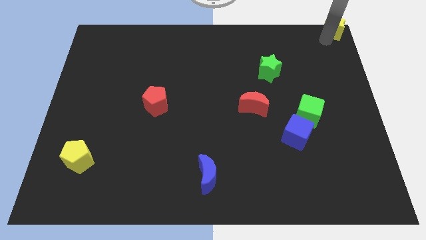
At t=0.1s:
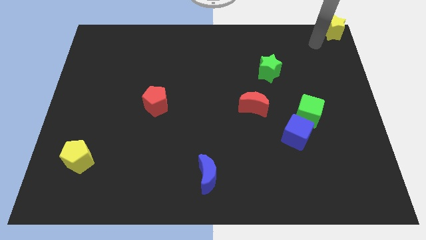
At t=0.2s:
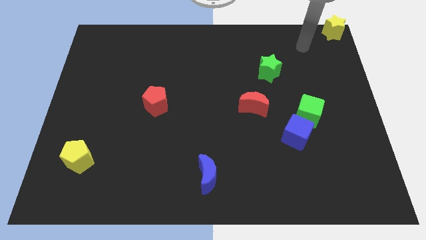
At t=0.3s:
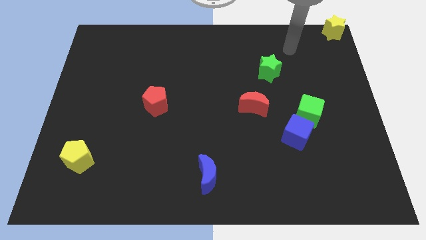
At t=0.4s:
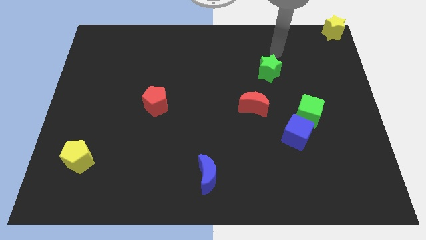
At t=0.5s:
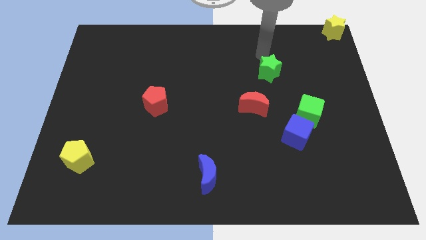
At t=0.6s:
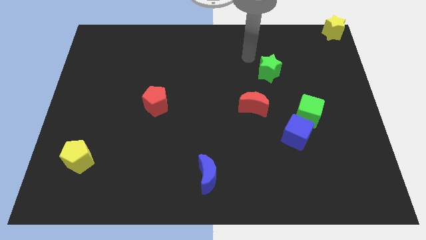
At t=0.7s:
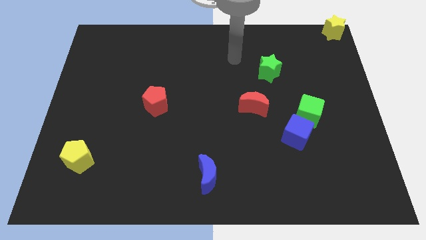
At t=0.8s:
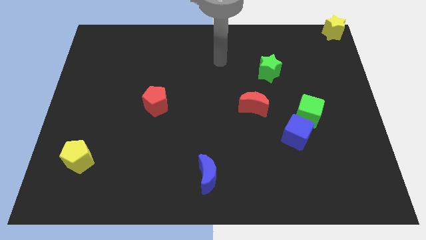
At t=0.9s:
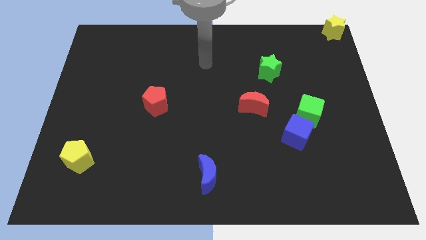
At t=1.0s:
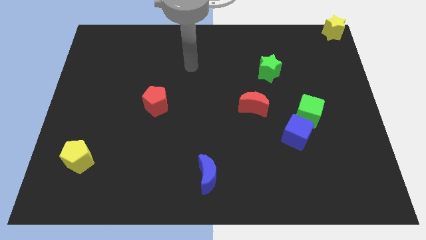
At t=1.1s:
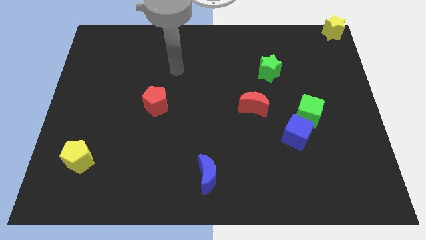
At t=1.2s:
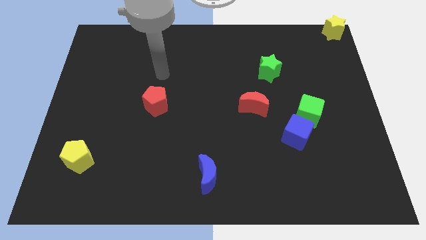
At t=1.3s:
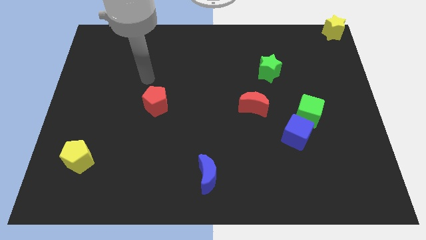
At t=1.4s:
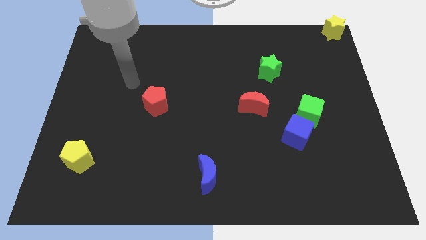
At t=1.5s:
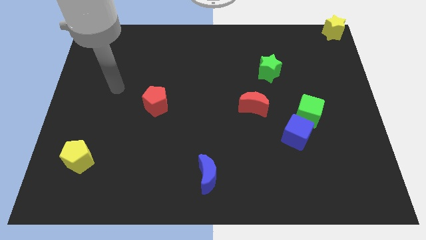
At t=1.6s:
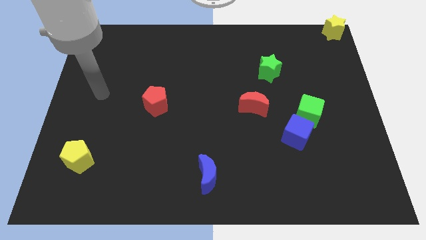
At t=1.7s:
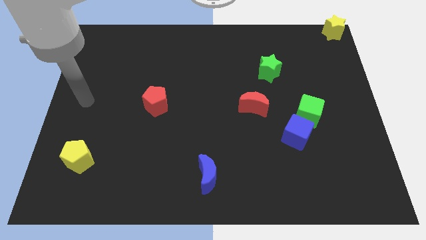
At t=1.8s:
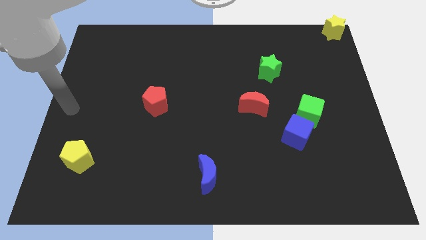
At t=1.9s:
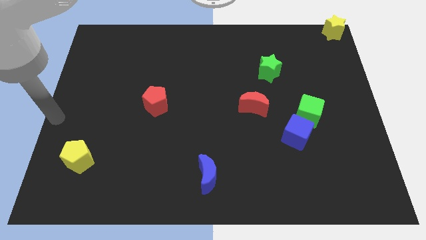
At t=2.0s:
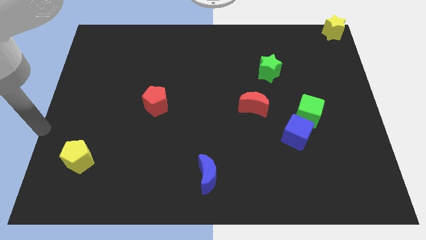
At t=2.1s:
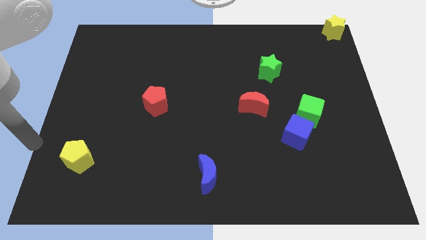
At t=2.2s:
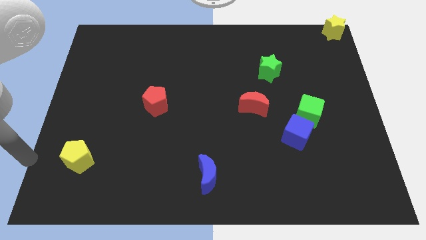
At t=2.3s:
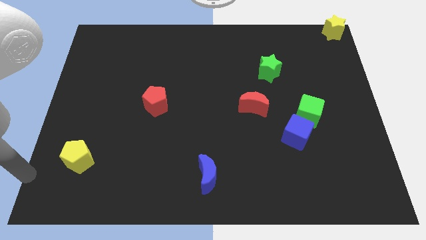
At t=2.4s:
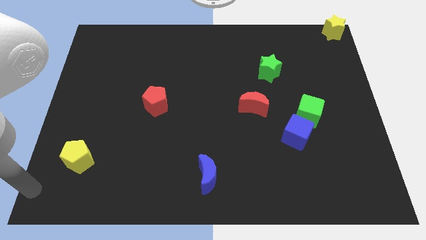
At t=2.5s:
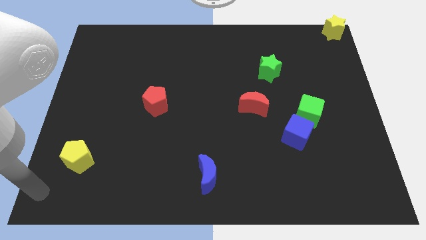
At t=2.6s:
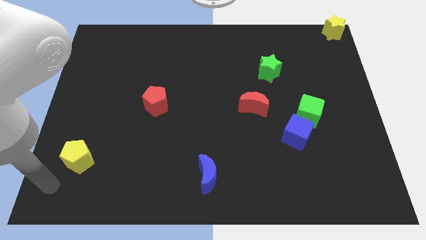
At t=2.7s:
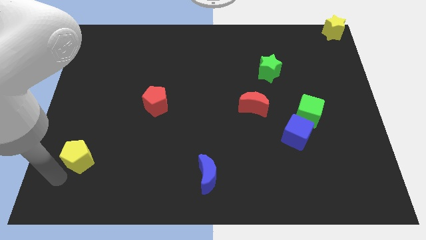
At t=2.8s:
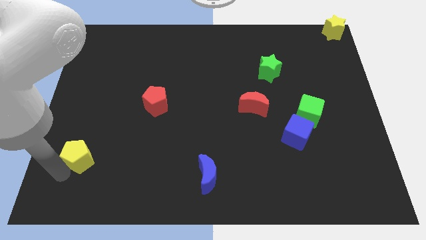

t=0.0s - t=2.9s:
place your arm to the bottom of the yellow pentagon

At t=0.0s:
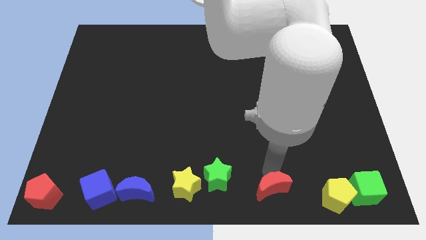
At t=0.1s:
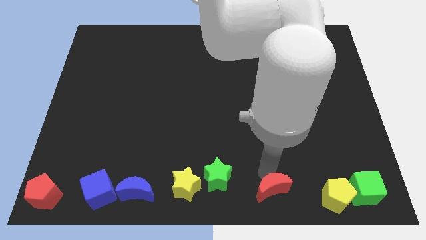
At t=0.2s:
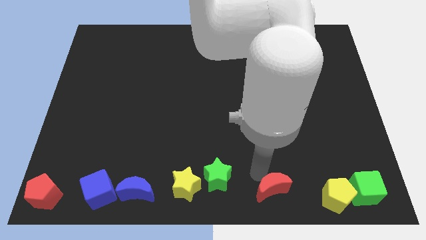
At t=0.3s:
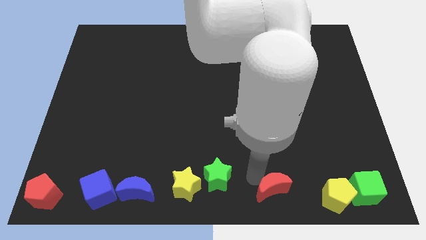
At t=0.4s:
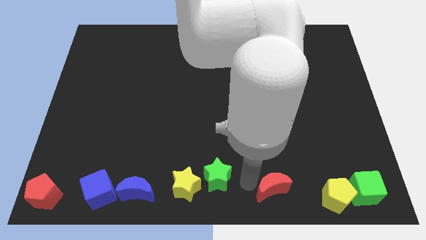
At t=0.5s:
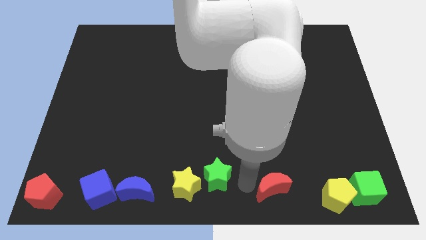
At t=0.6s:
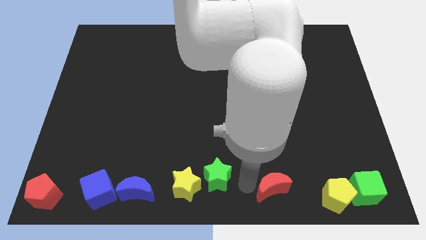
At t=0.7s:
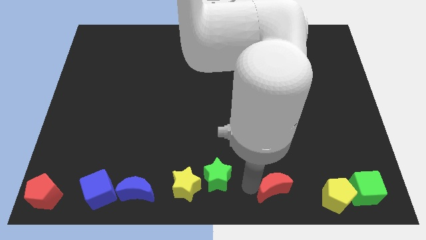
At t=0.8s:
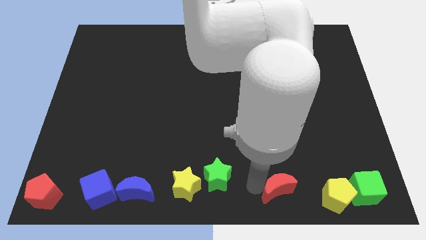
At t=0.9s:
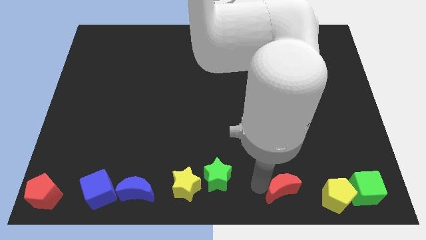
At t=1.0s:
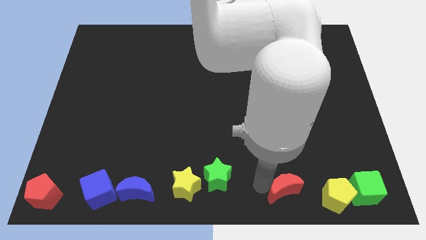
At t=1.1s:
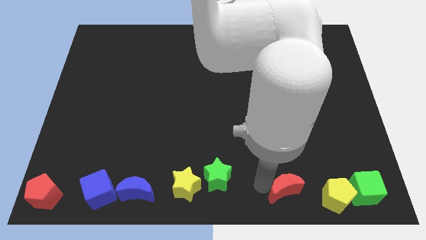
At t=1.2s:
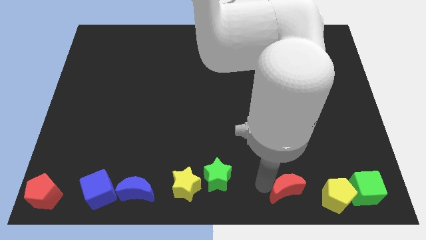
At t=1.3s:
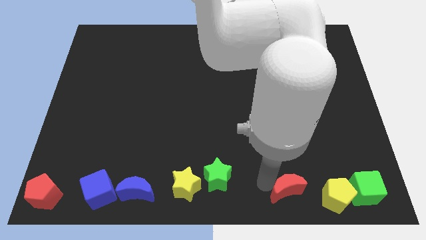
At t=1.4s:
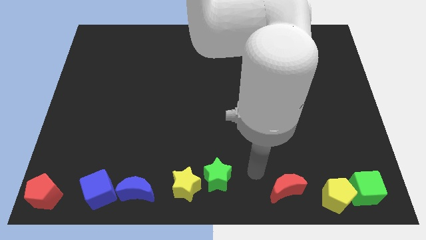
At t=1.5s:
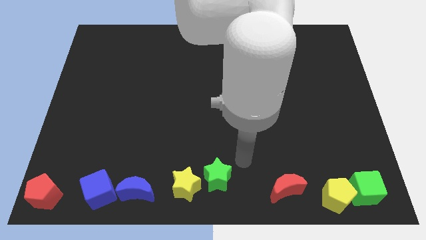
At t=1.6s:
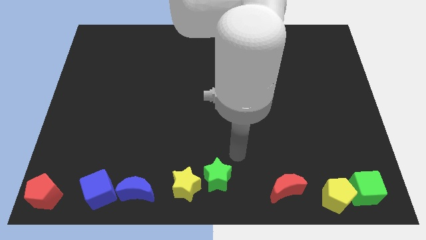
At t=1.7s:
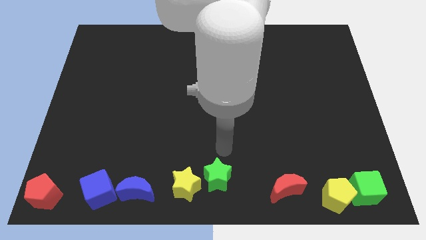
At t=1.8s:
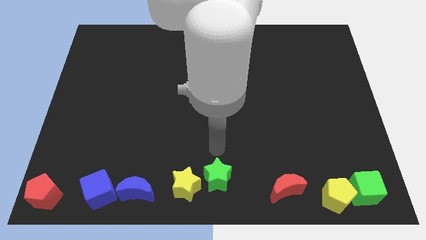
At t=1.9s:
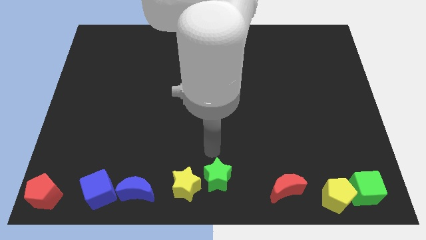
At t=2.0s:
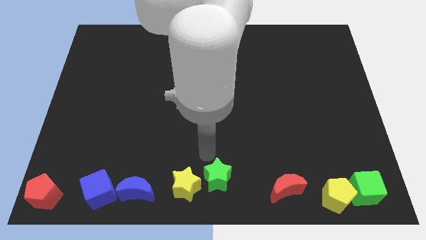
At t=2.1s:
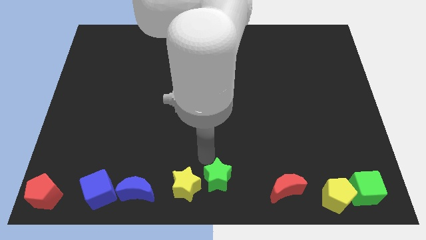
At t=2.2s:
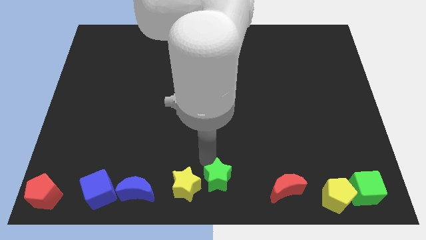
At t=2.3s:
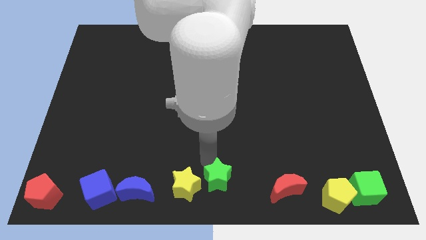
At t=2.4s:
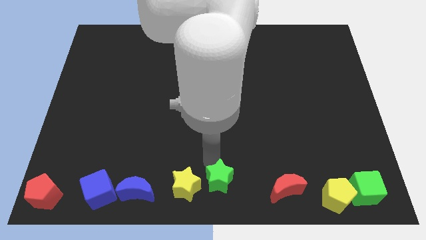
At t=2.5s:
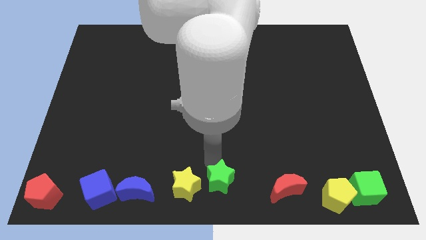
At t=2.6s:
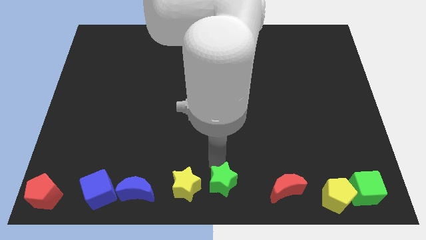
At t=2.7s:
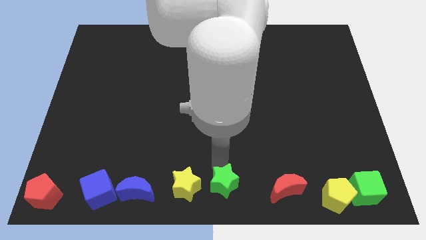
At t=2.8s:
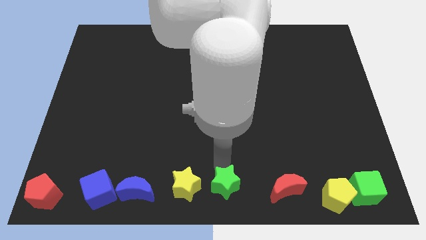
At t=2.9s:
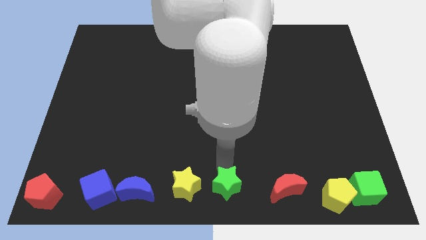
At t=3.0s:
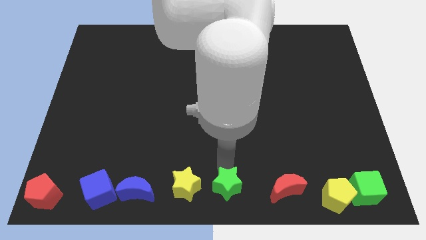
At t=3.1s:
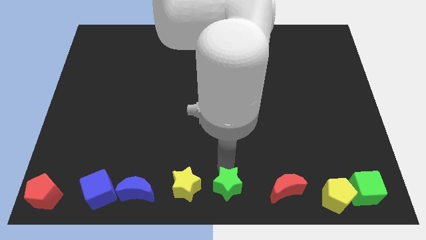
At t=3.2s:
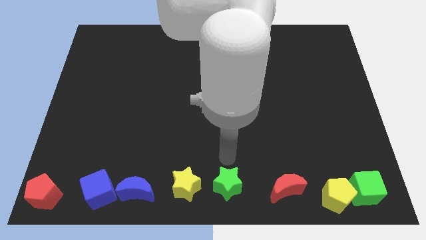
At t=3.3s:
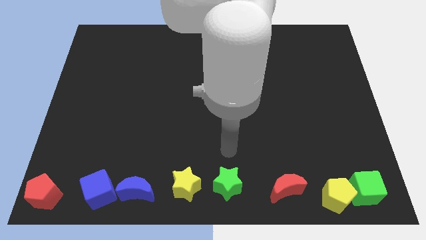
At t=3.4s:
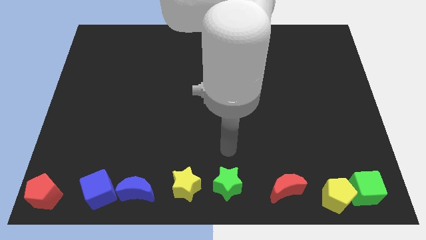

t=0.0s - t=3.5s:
adjust the red moon and the green star in between the yellow blocks

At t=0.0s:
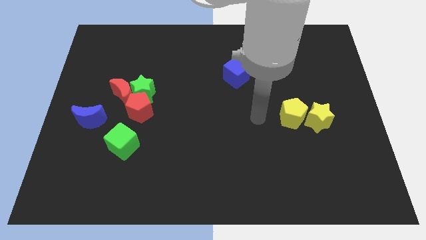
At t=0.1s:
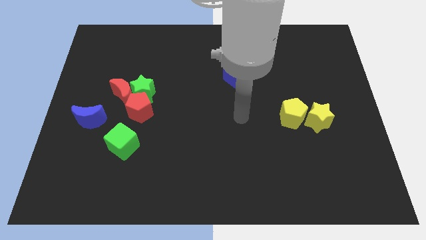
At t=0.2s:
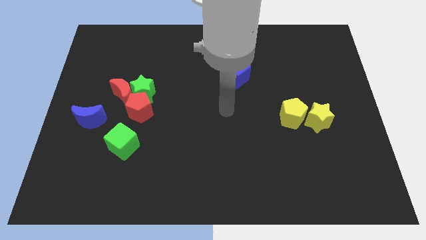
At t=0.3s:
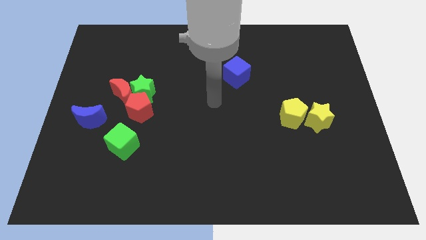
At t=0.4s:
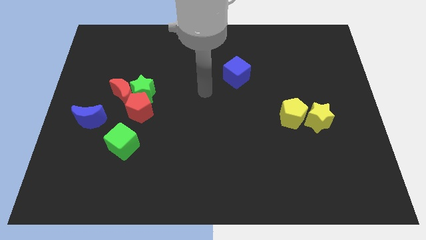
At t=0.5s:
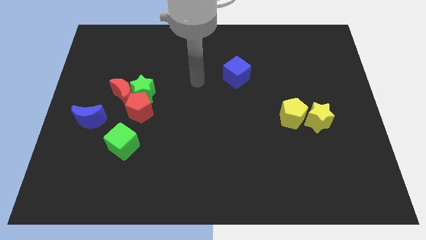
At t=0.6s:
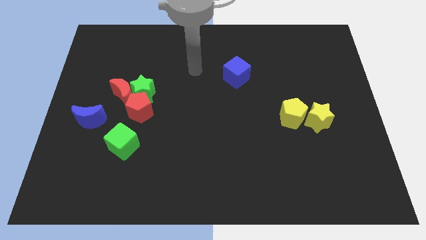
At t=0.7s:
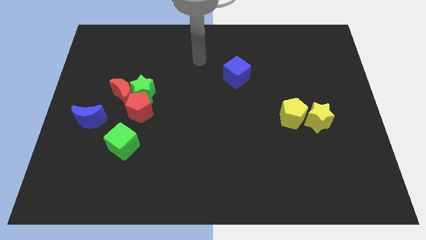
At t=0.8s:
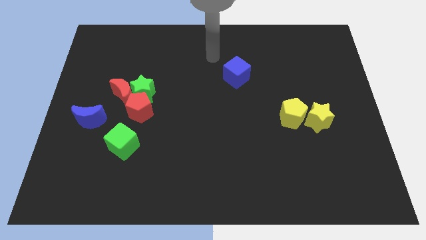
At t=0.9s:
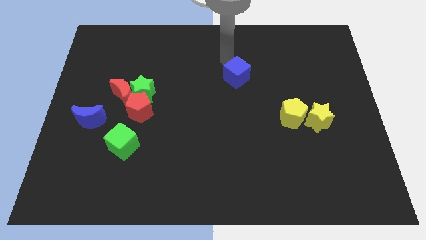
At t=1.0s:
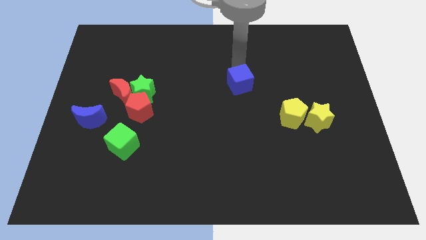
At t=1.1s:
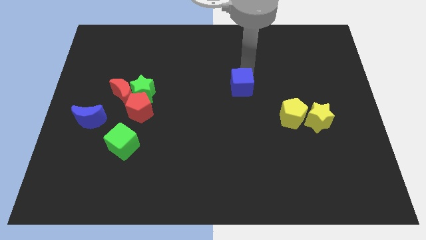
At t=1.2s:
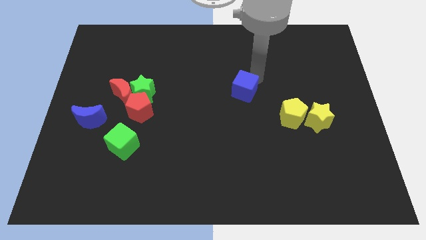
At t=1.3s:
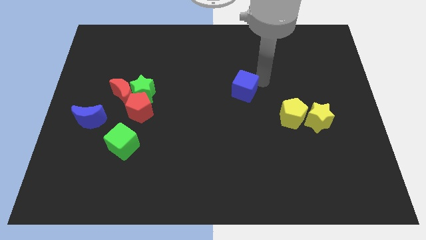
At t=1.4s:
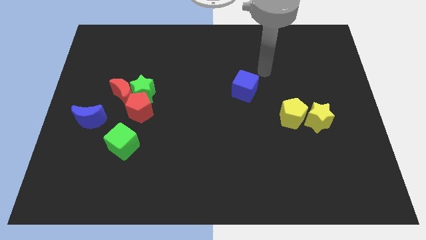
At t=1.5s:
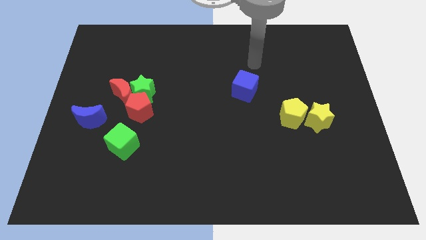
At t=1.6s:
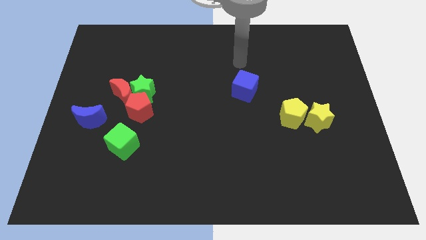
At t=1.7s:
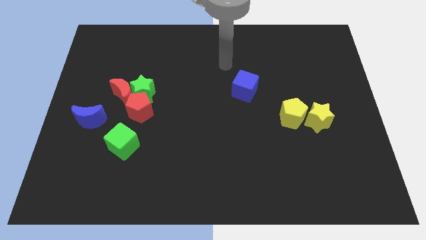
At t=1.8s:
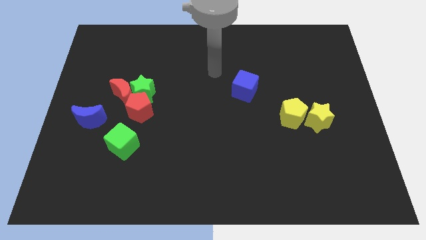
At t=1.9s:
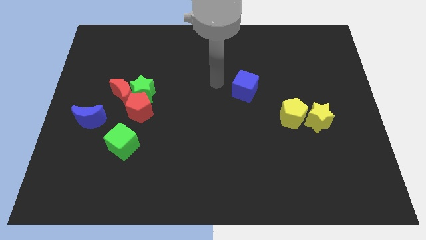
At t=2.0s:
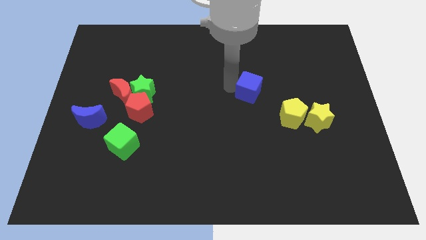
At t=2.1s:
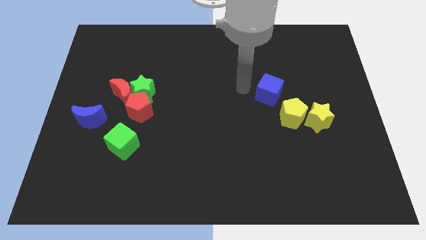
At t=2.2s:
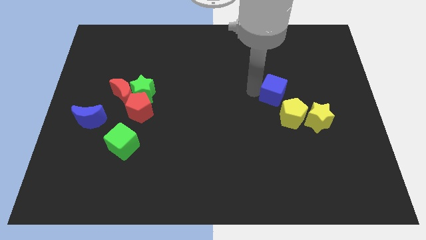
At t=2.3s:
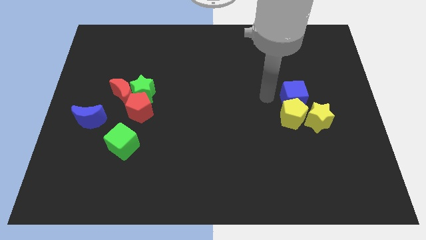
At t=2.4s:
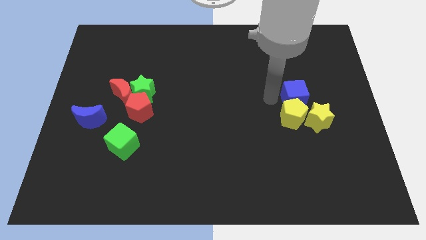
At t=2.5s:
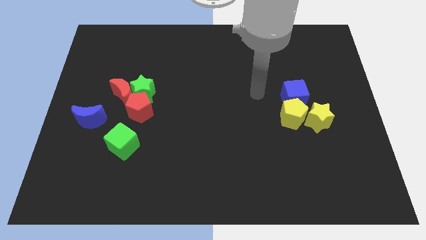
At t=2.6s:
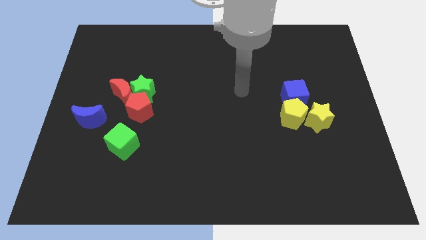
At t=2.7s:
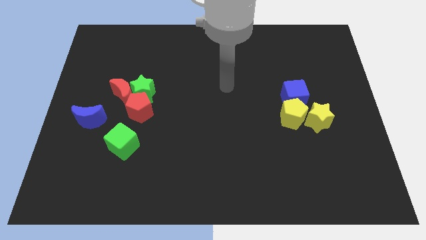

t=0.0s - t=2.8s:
place the blue cube above the yellow pentagon
